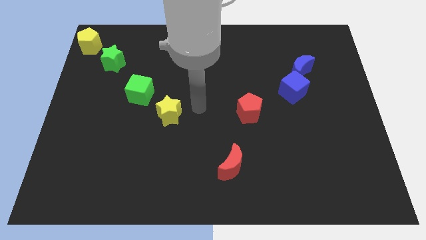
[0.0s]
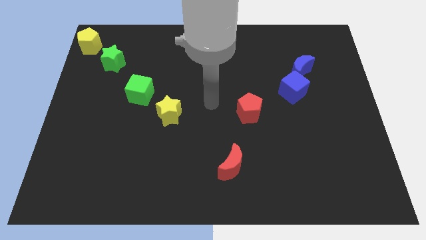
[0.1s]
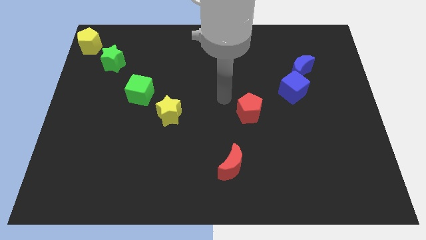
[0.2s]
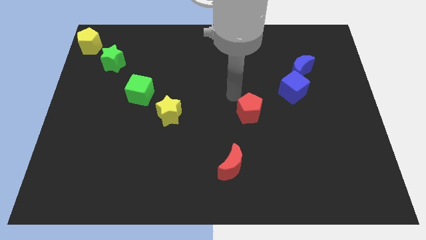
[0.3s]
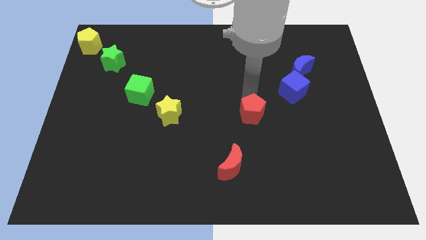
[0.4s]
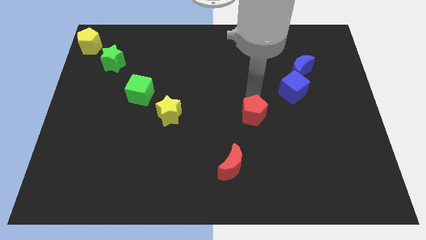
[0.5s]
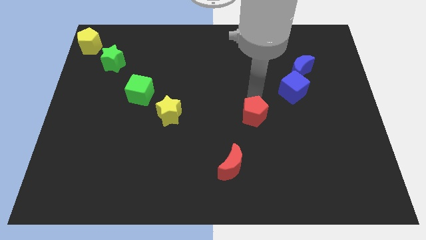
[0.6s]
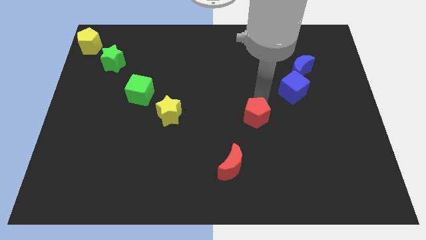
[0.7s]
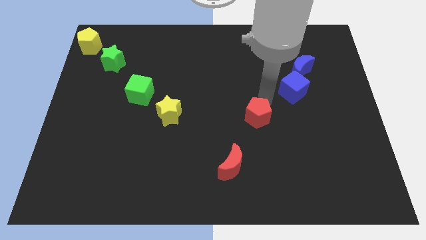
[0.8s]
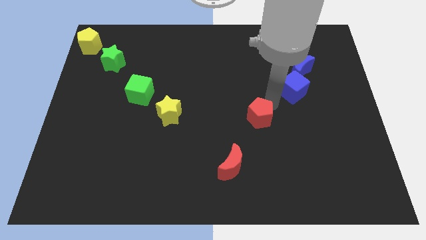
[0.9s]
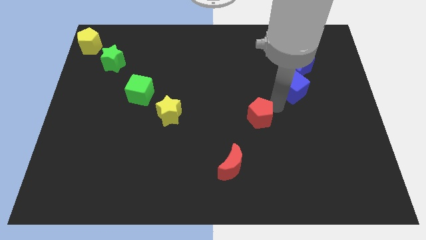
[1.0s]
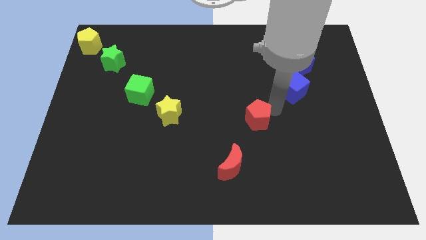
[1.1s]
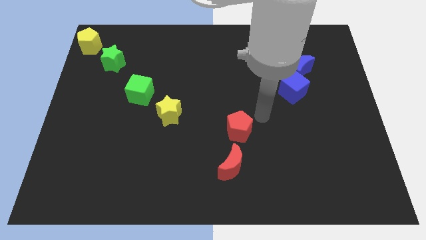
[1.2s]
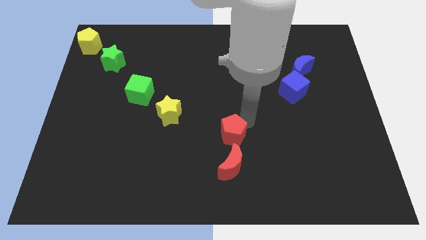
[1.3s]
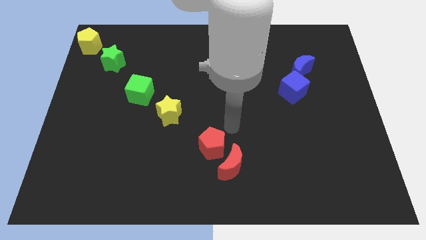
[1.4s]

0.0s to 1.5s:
push the red pentagon towards the red moon

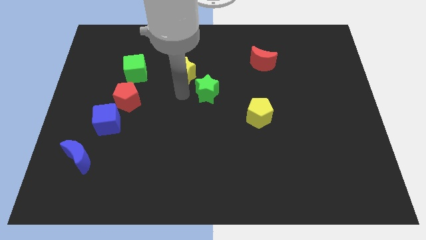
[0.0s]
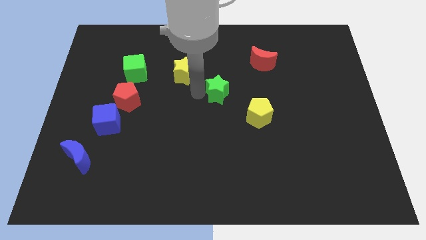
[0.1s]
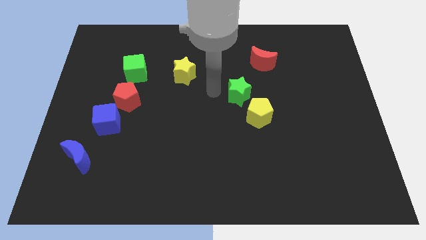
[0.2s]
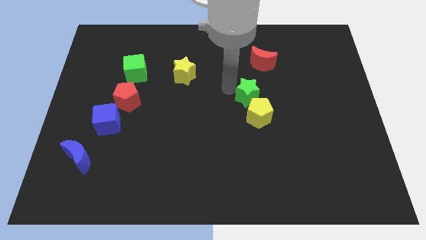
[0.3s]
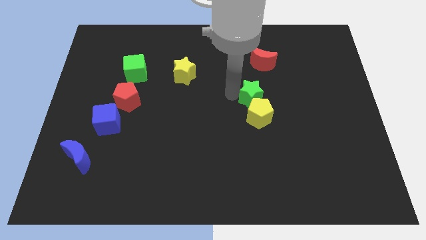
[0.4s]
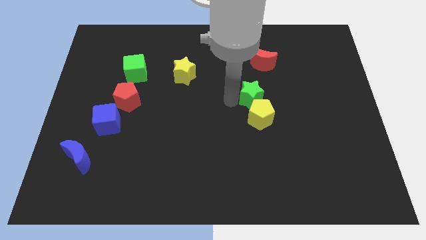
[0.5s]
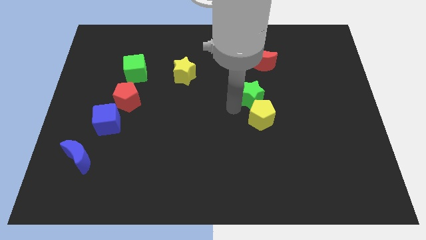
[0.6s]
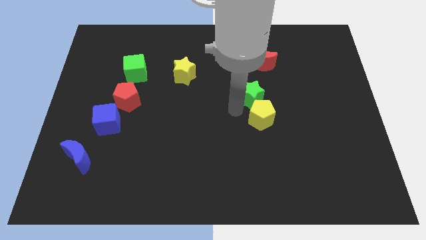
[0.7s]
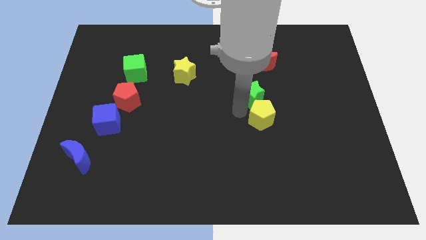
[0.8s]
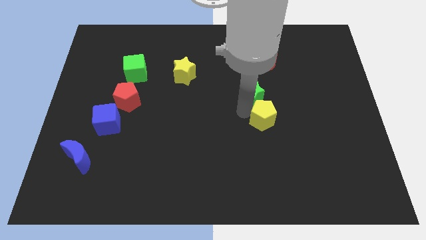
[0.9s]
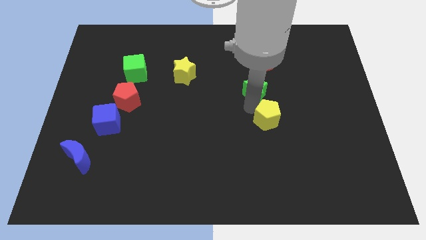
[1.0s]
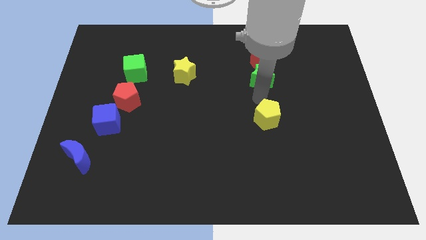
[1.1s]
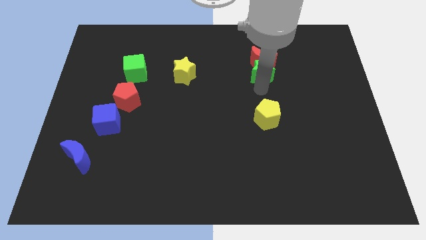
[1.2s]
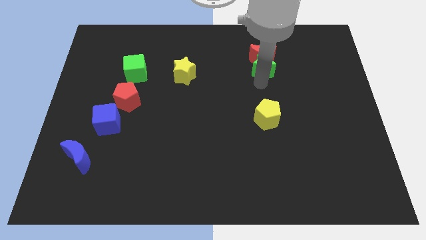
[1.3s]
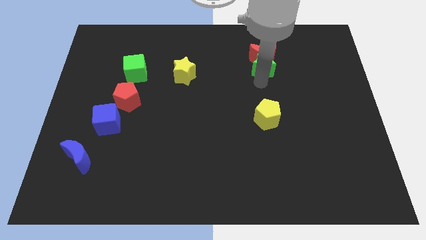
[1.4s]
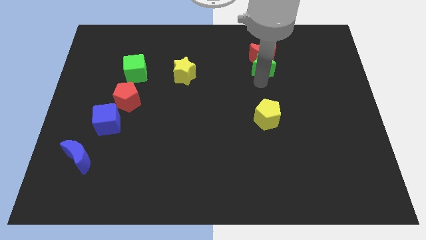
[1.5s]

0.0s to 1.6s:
move green star to the bottom of the red crescent

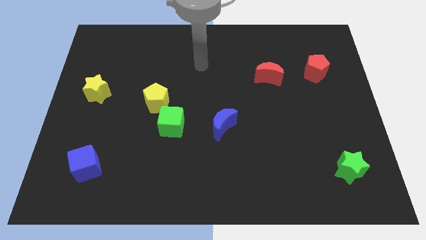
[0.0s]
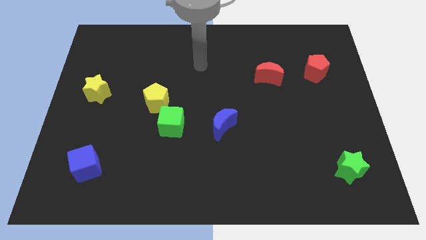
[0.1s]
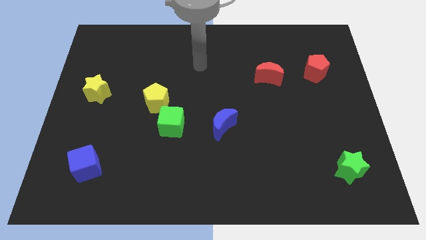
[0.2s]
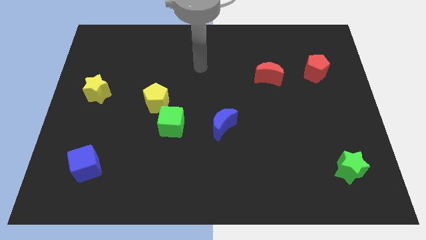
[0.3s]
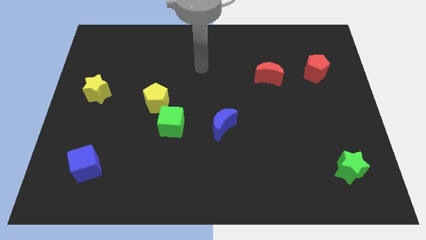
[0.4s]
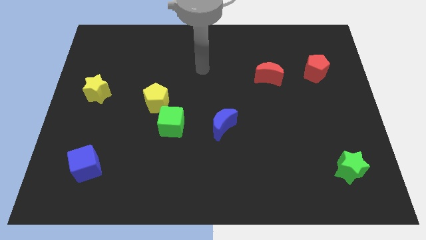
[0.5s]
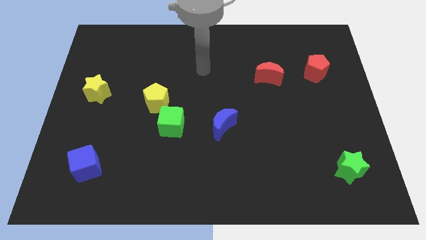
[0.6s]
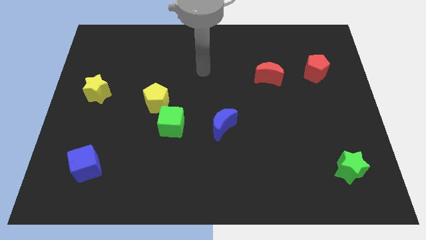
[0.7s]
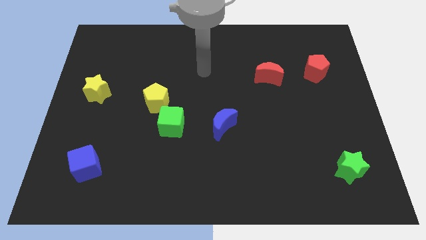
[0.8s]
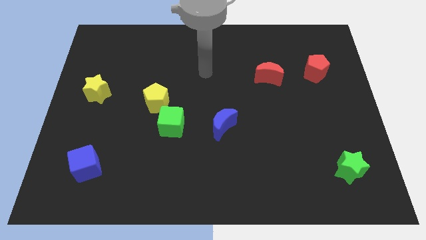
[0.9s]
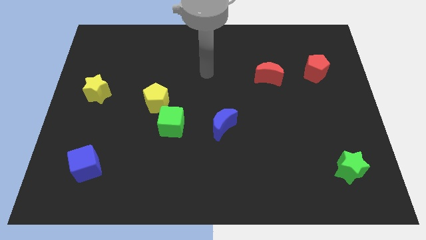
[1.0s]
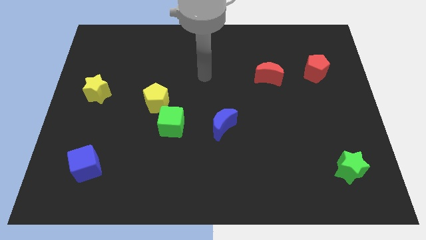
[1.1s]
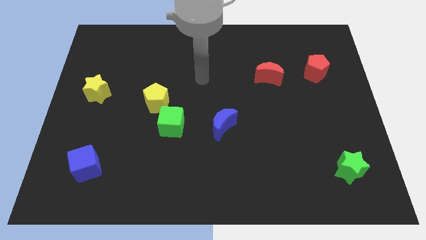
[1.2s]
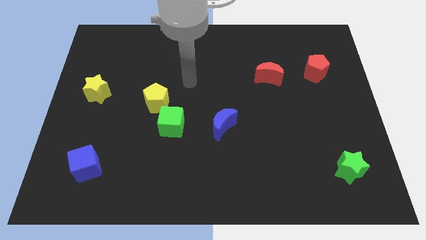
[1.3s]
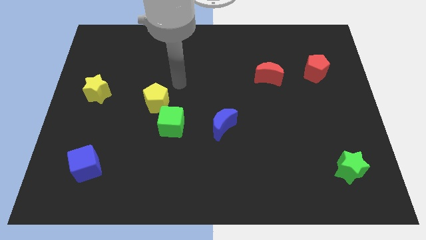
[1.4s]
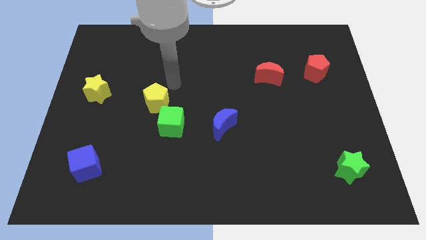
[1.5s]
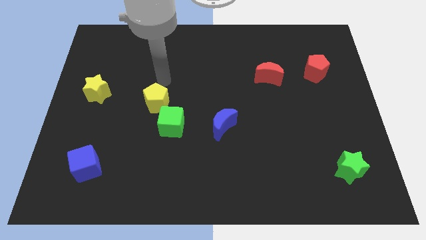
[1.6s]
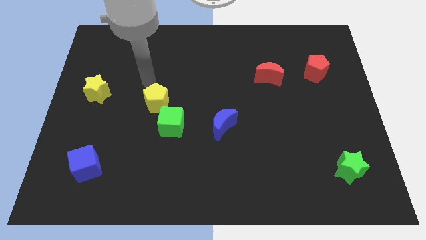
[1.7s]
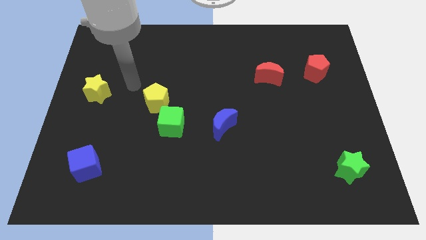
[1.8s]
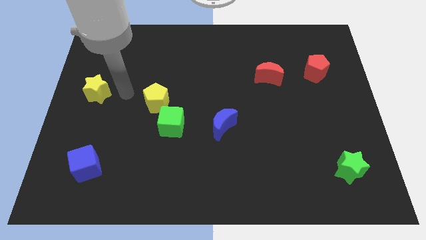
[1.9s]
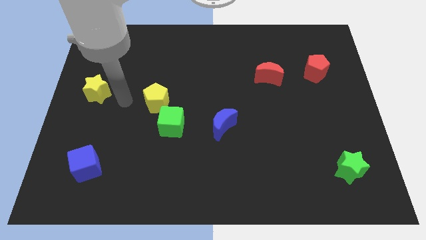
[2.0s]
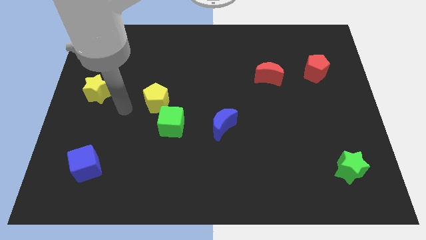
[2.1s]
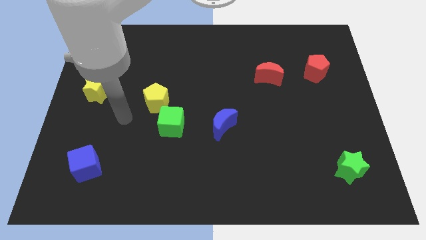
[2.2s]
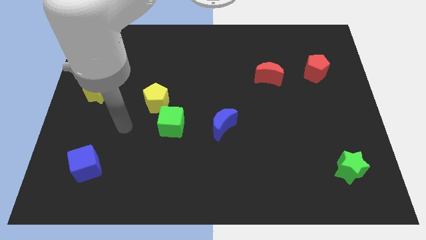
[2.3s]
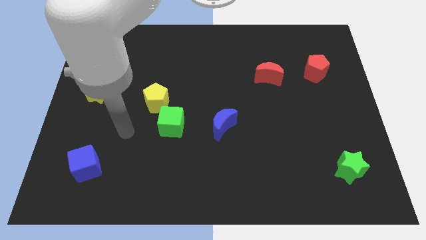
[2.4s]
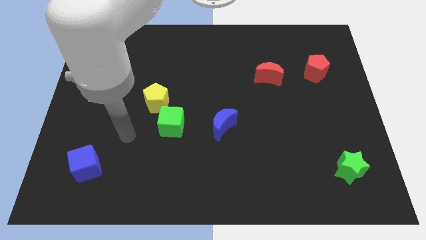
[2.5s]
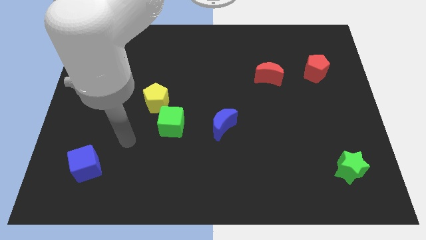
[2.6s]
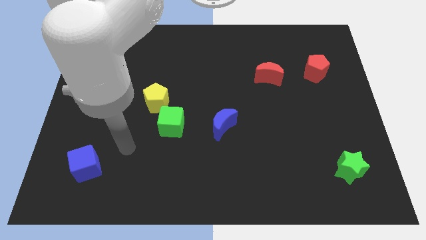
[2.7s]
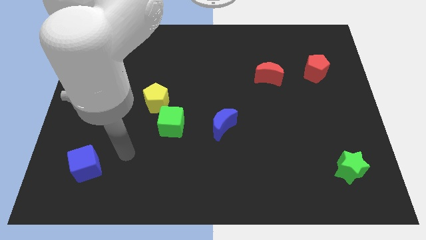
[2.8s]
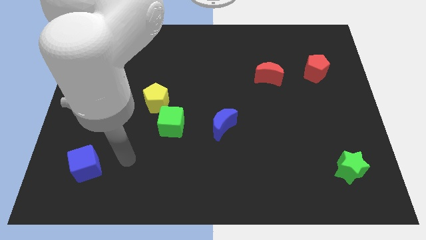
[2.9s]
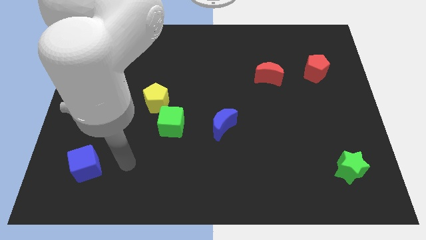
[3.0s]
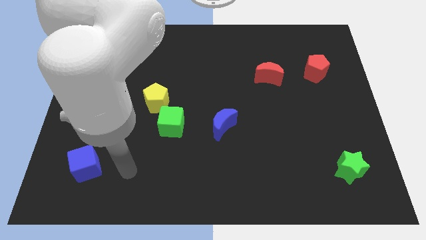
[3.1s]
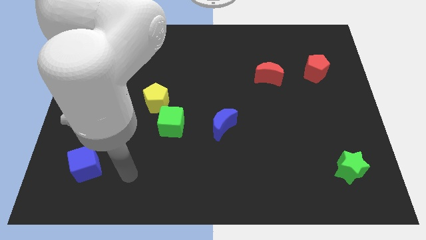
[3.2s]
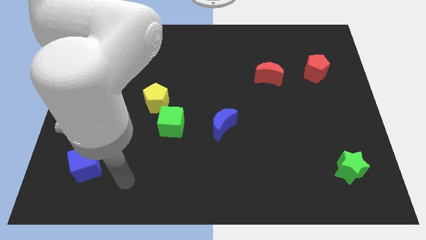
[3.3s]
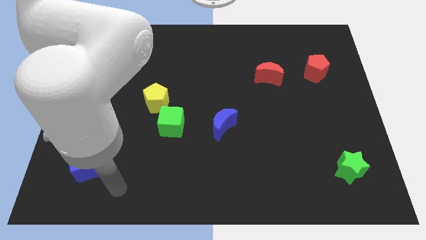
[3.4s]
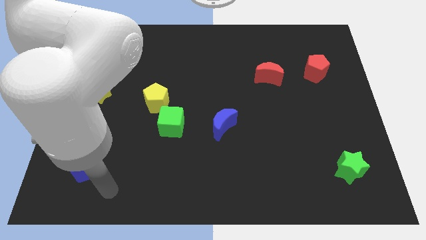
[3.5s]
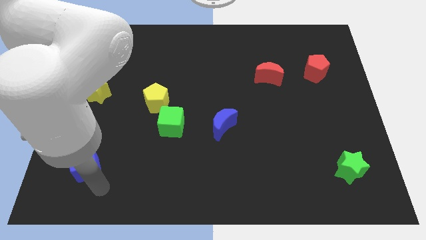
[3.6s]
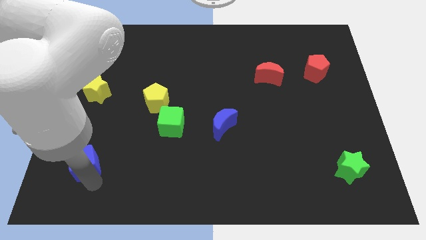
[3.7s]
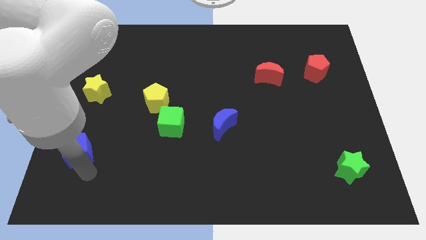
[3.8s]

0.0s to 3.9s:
place your arm below the blue cube

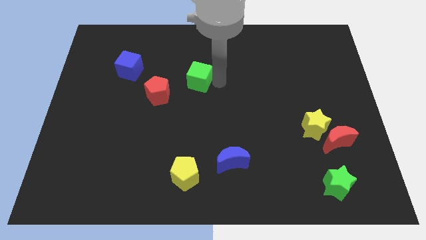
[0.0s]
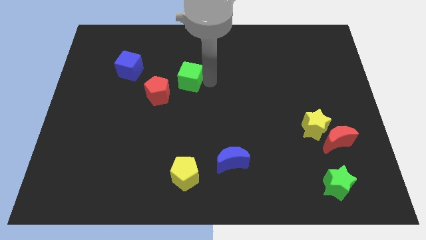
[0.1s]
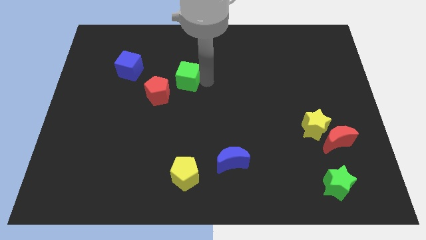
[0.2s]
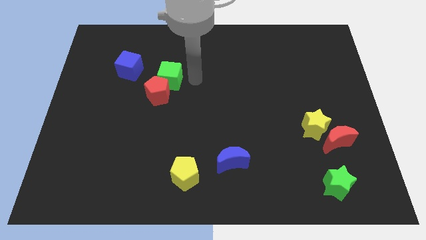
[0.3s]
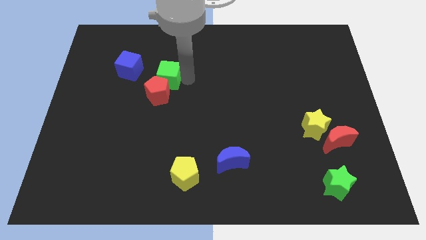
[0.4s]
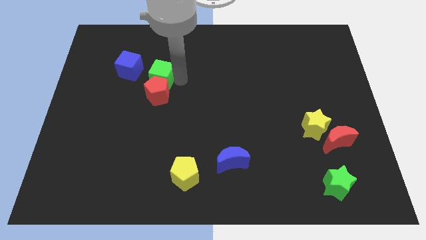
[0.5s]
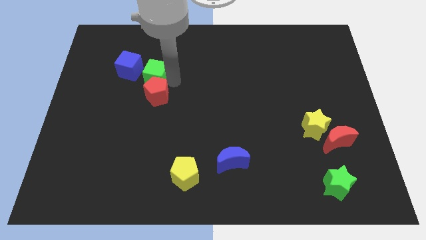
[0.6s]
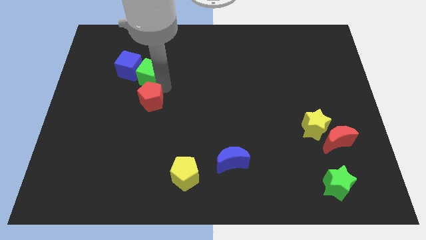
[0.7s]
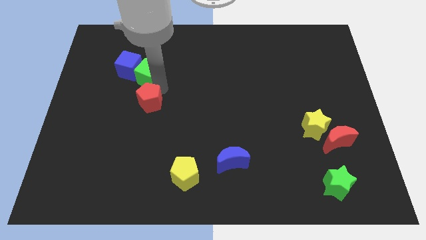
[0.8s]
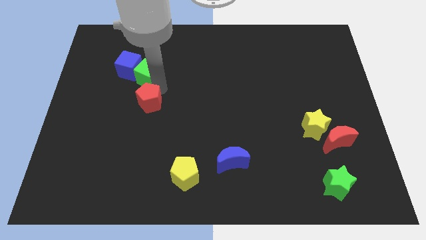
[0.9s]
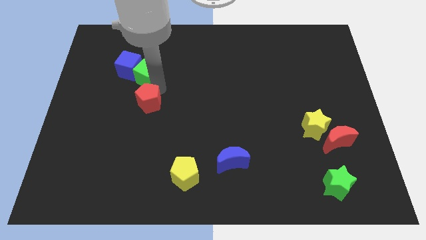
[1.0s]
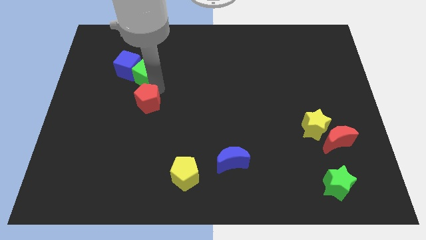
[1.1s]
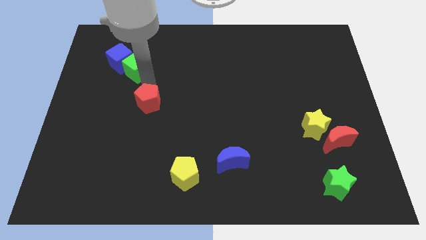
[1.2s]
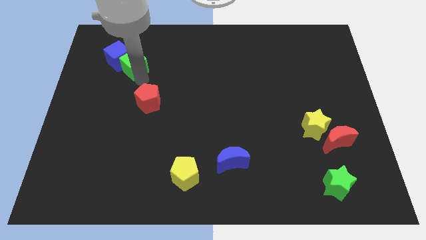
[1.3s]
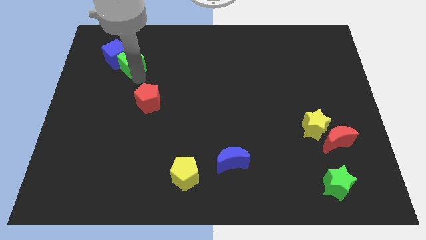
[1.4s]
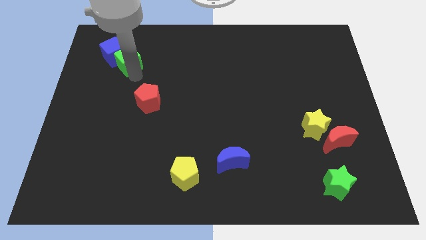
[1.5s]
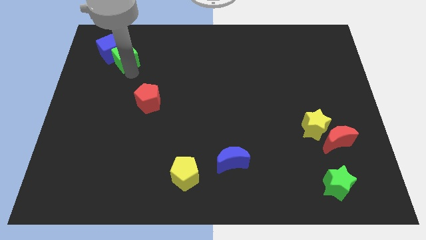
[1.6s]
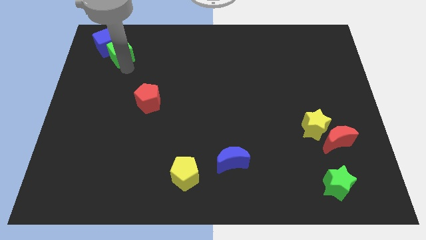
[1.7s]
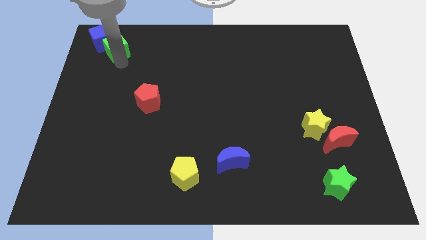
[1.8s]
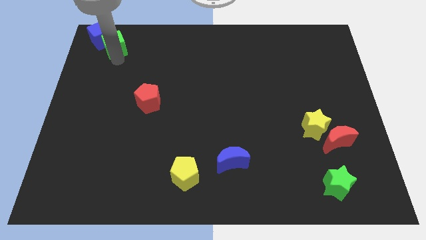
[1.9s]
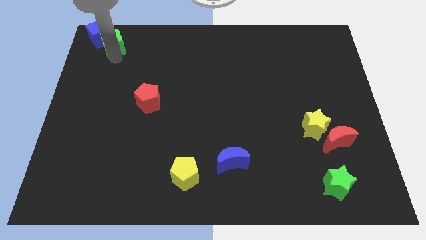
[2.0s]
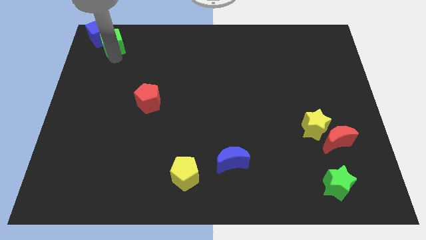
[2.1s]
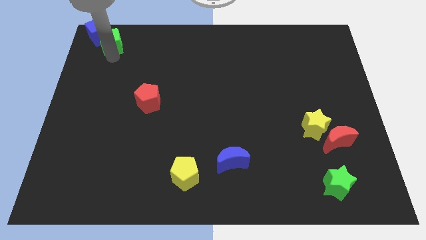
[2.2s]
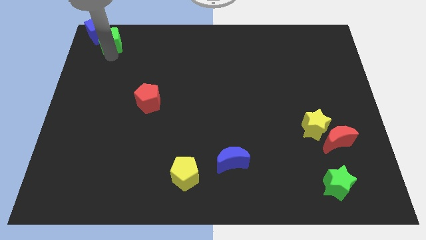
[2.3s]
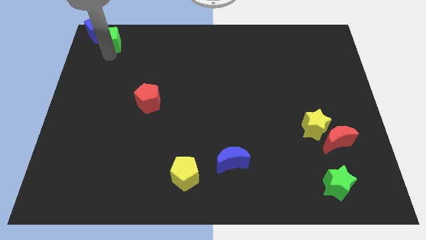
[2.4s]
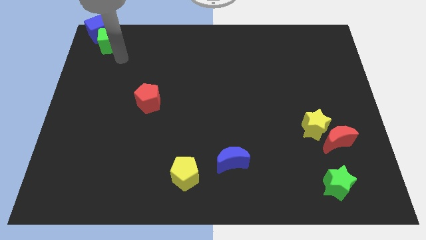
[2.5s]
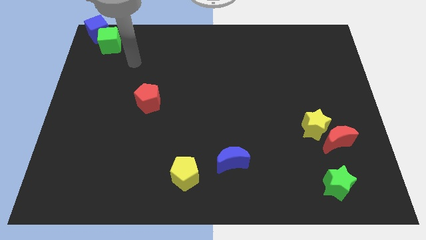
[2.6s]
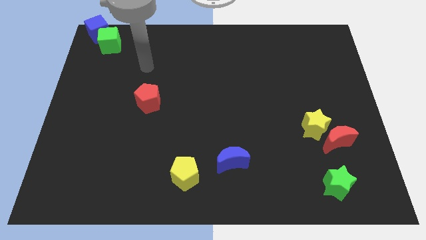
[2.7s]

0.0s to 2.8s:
push the blue cube with green cube to the top left corner
